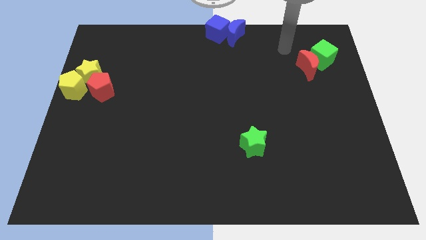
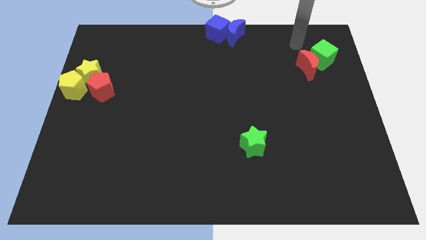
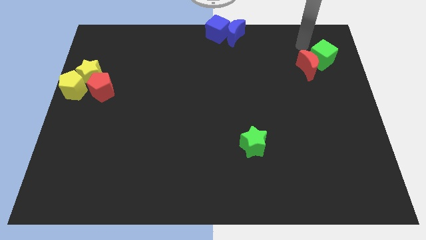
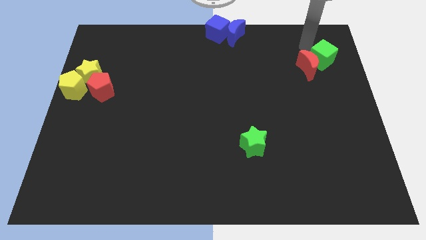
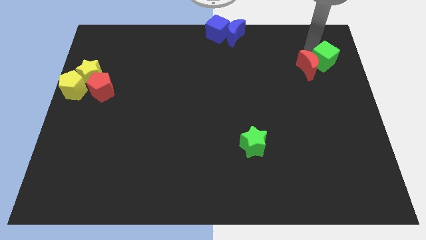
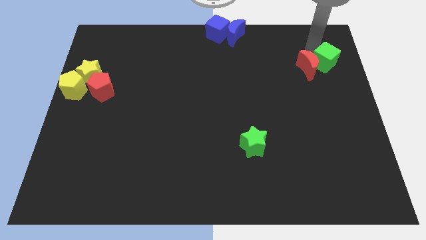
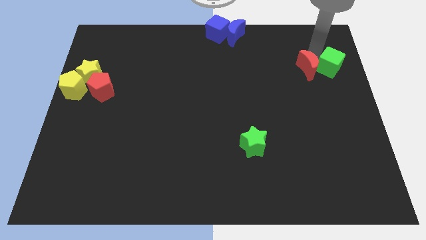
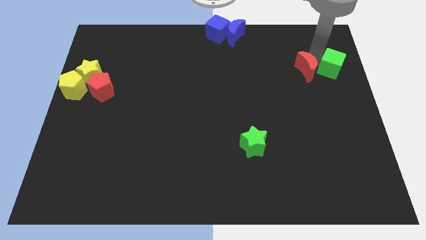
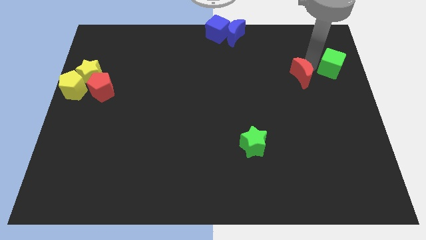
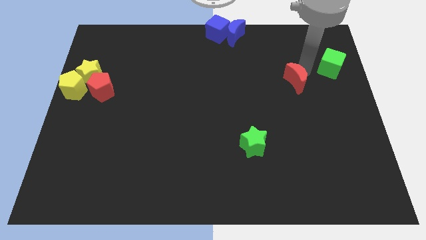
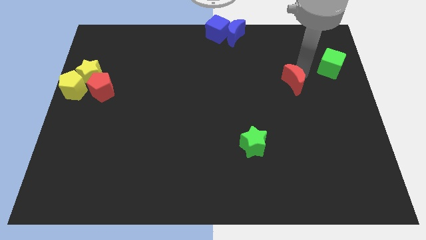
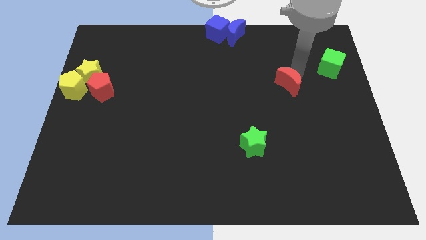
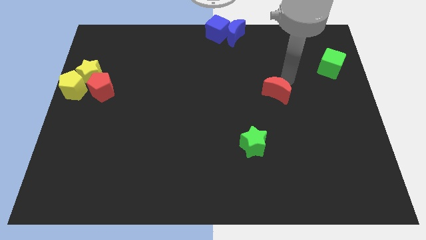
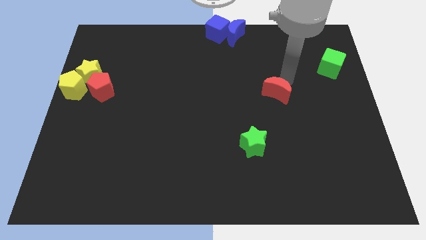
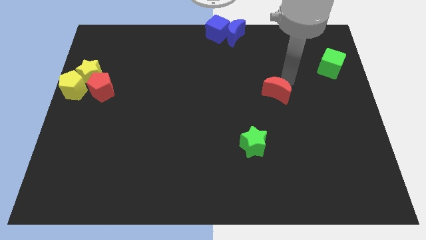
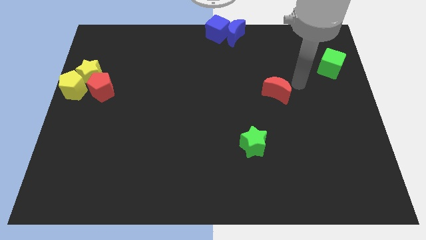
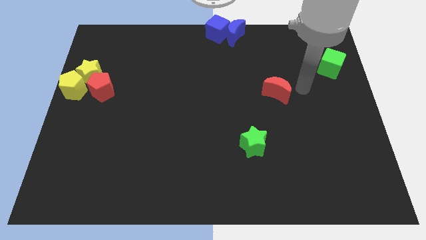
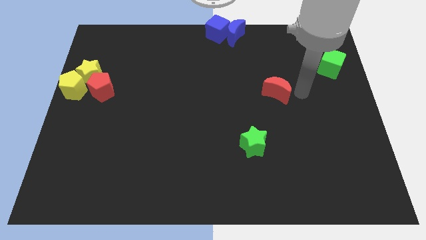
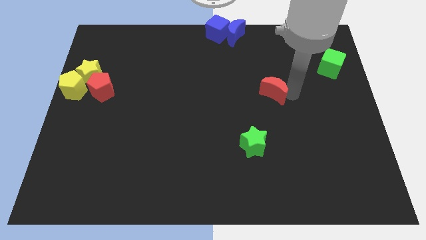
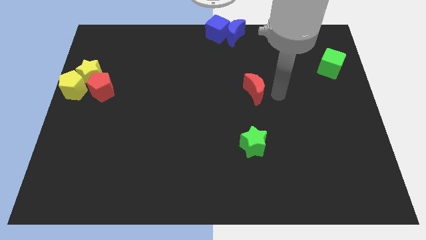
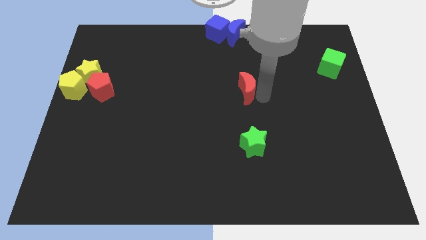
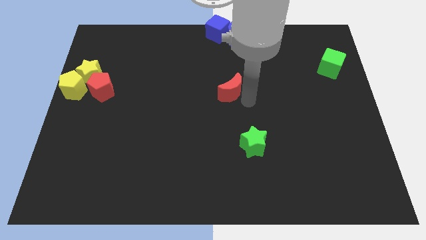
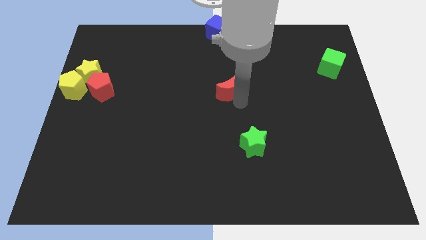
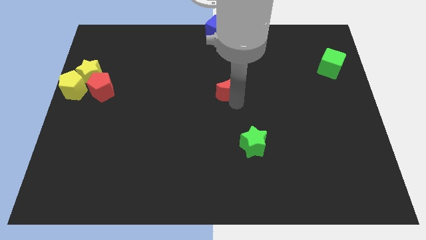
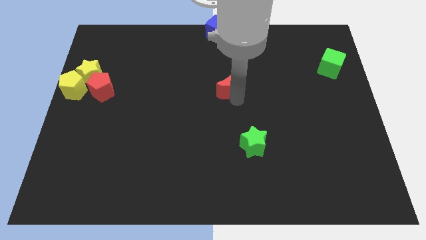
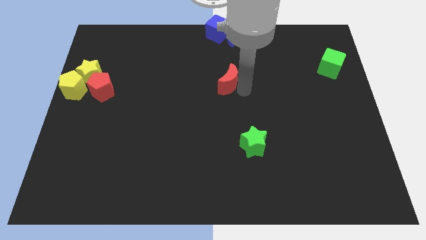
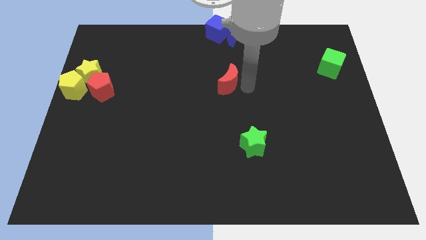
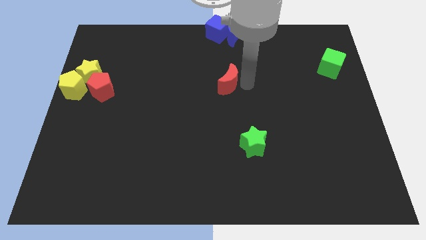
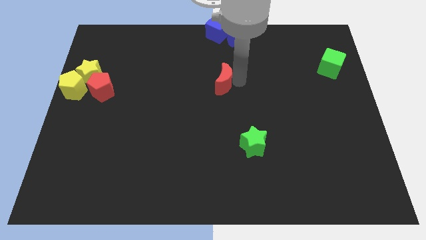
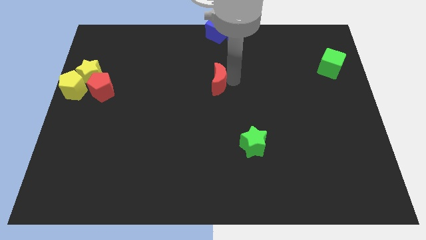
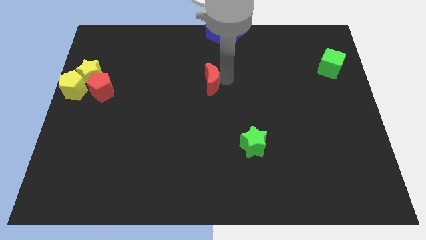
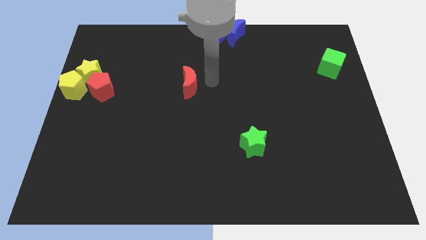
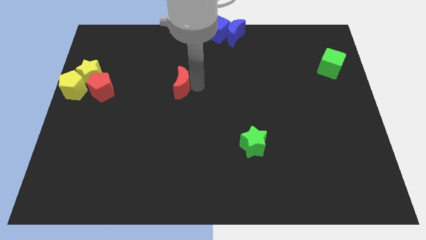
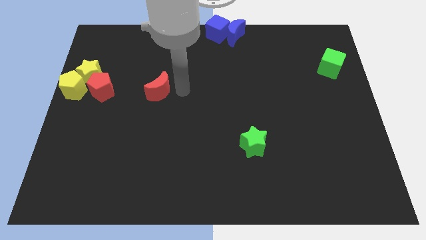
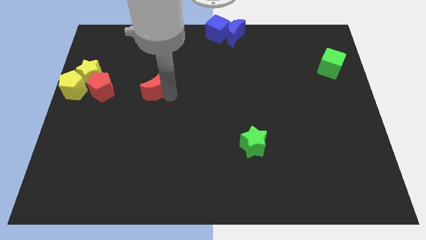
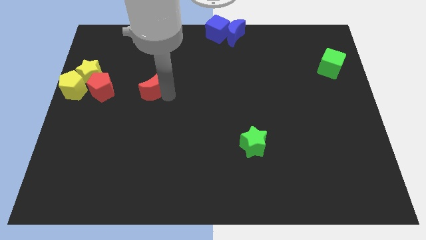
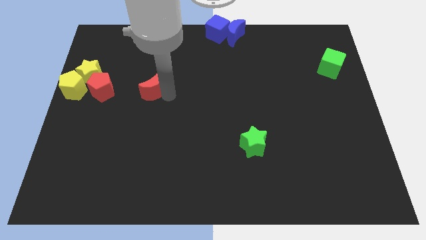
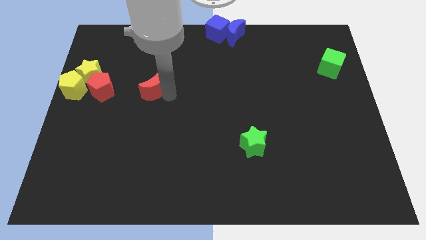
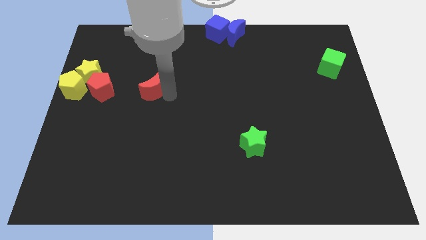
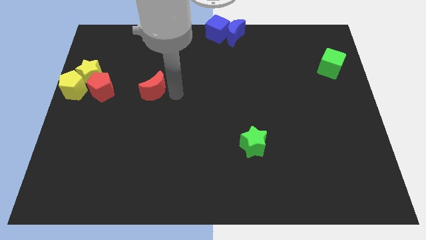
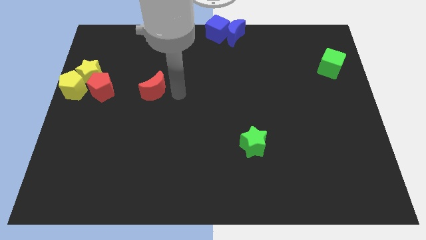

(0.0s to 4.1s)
move the red moon towards the red pentagon

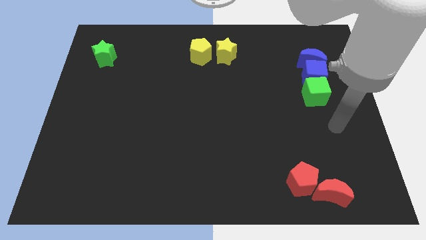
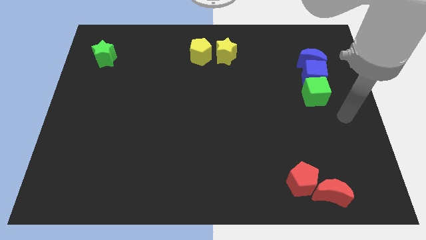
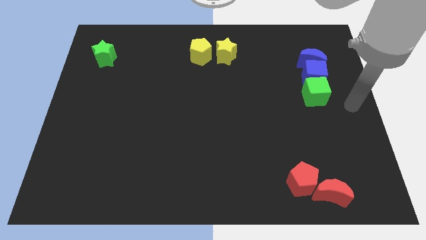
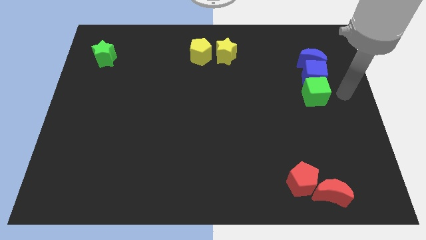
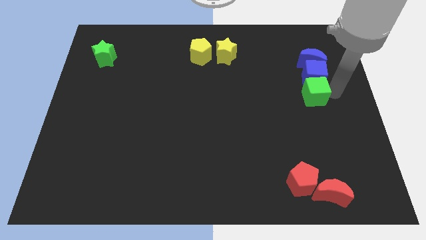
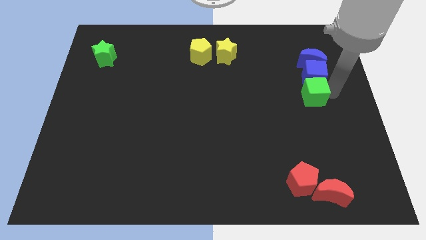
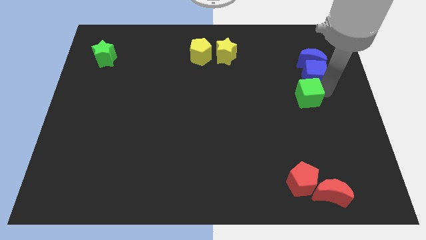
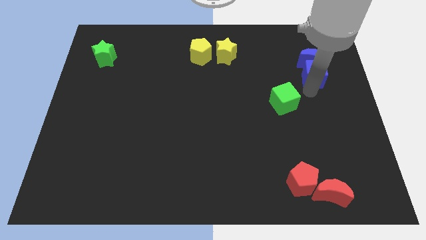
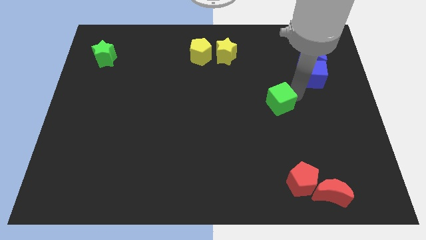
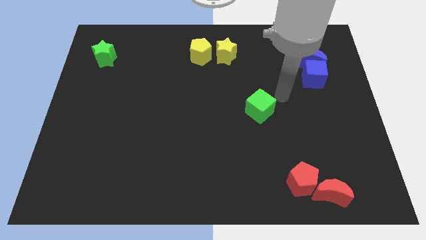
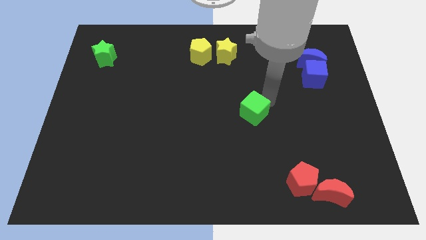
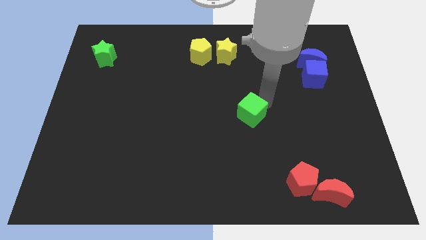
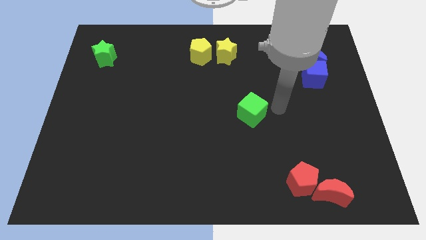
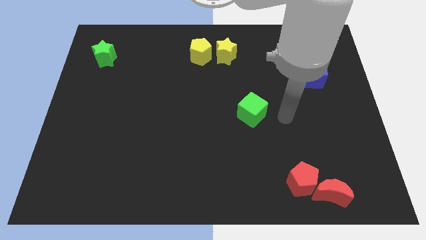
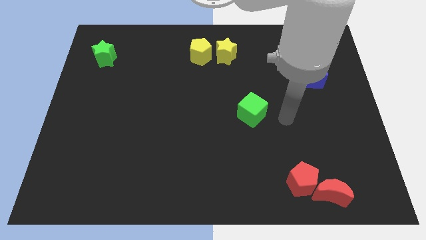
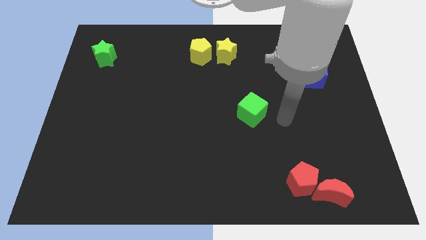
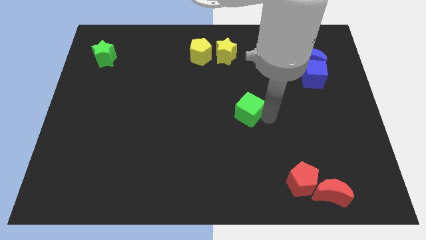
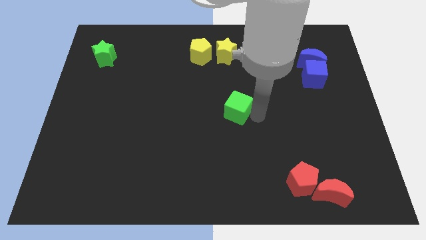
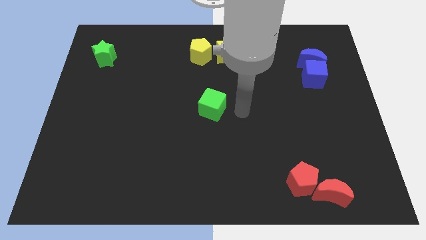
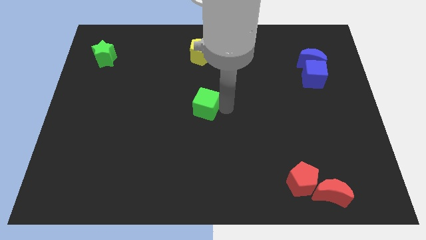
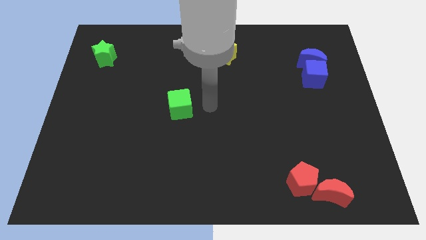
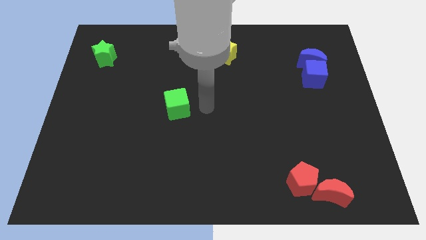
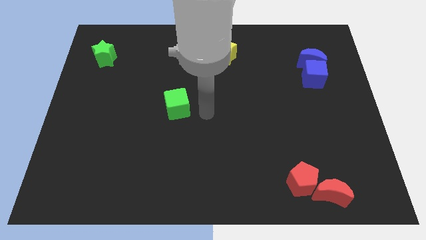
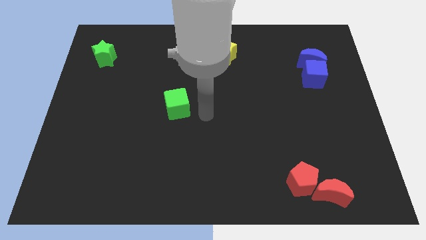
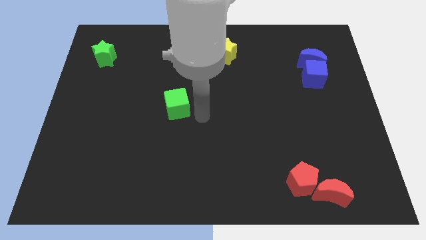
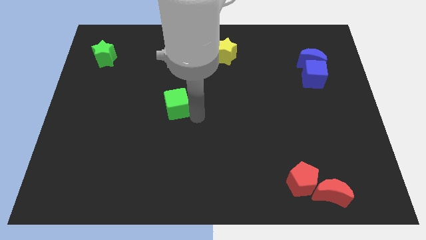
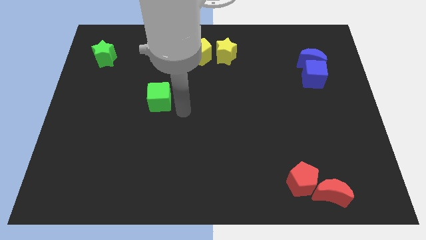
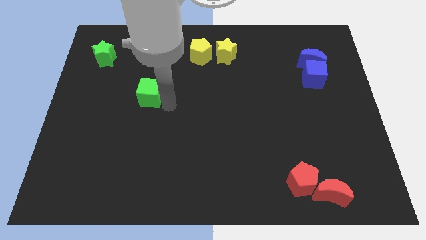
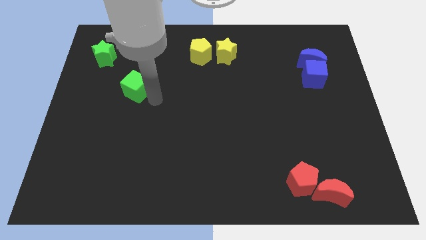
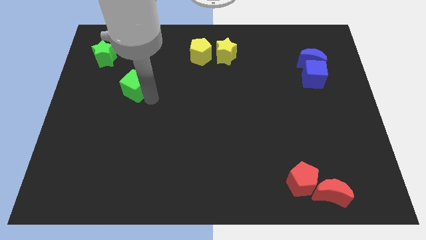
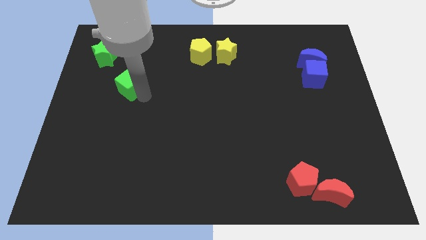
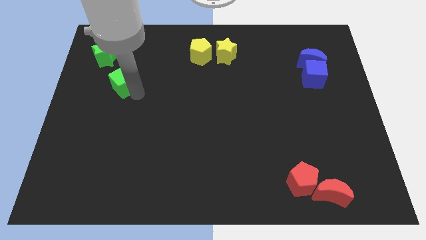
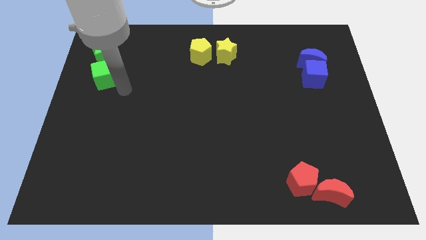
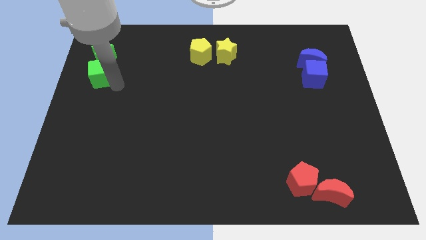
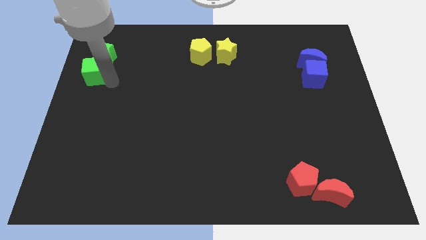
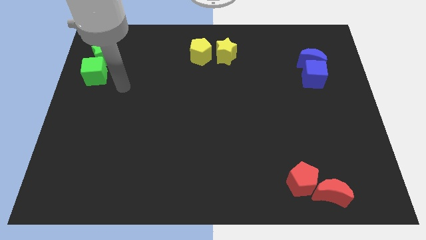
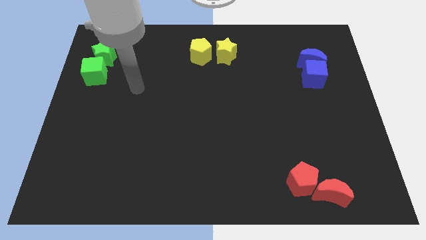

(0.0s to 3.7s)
move the green cube below to the green star

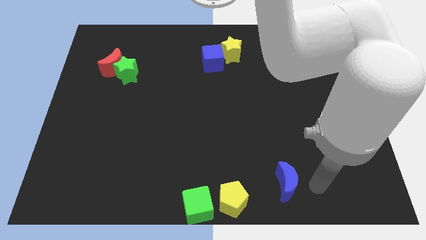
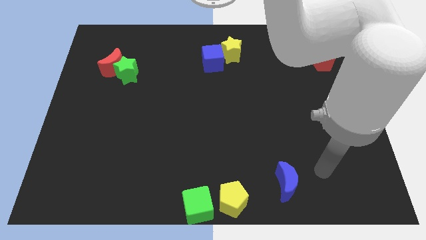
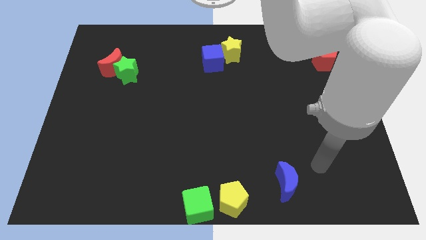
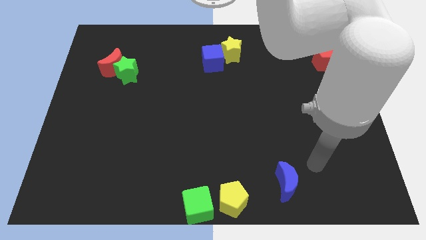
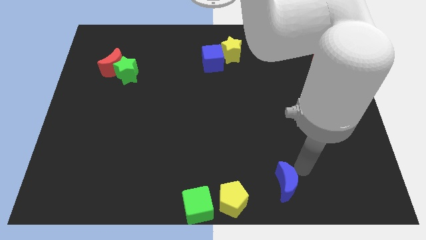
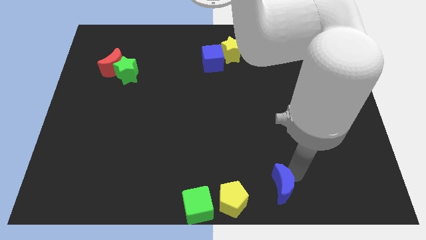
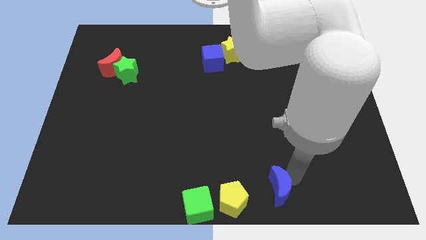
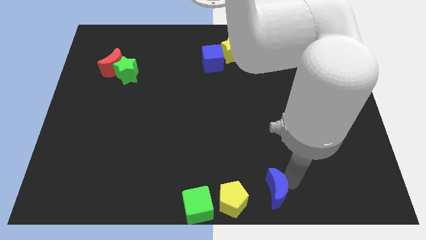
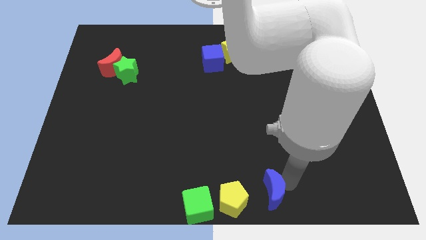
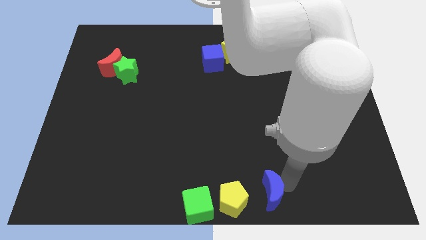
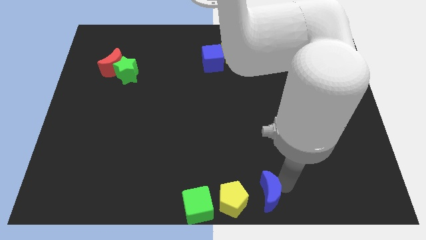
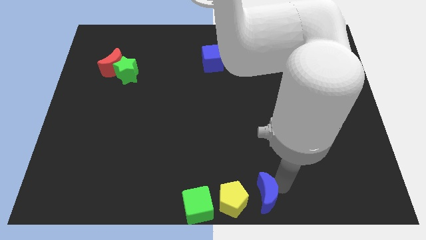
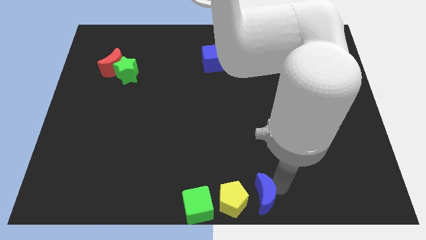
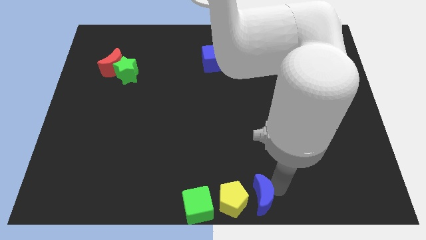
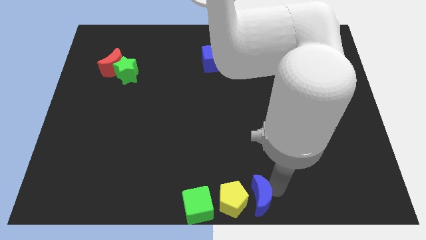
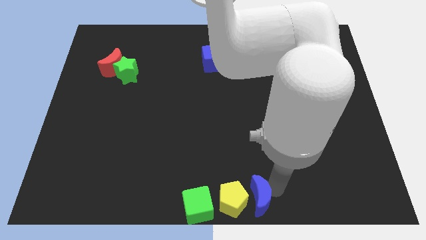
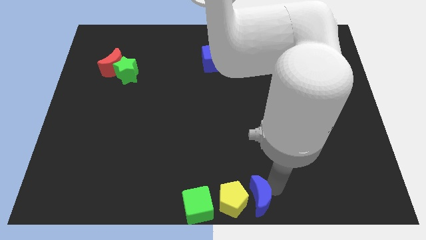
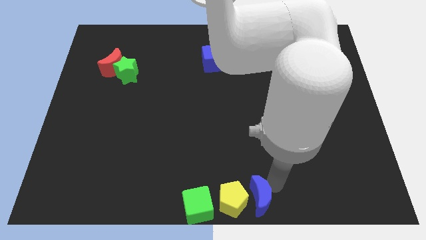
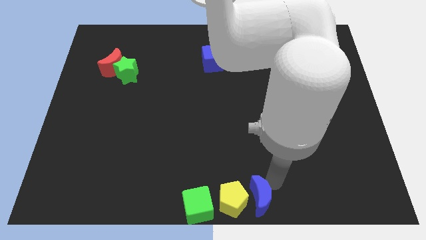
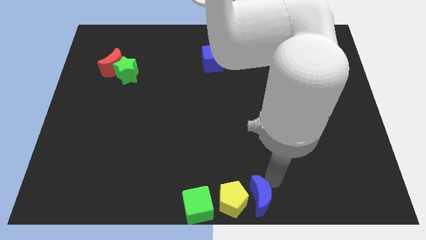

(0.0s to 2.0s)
push the blue crescent into the yellow pentagon
